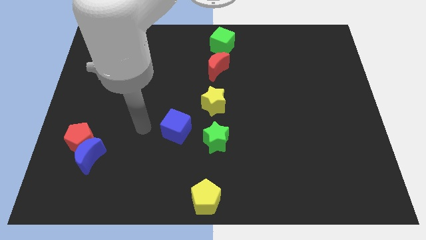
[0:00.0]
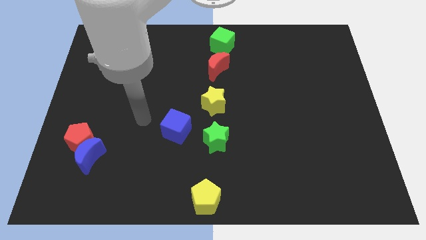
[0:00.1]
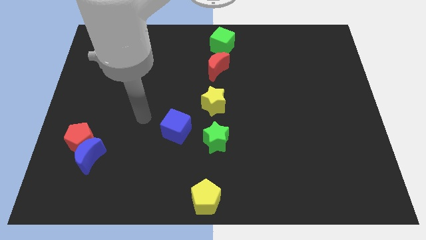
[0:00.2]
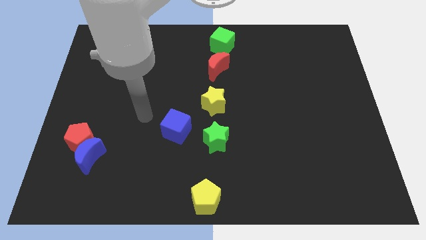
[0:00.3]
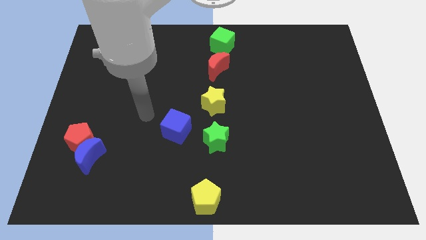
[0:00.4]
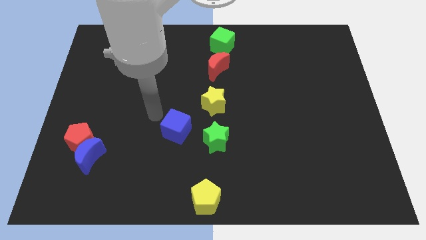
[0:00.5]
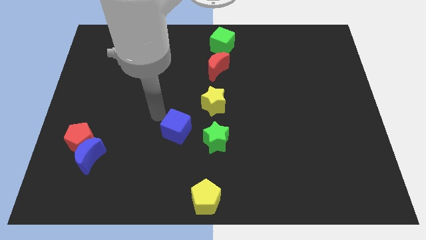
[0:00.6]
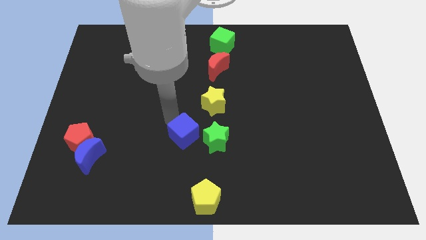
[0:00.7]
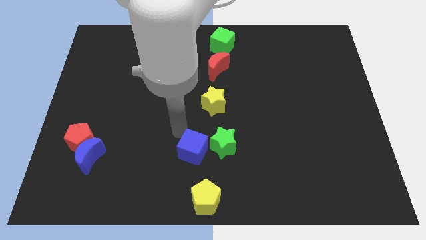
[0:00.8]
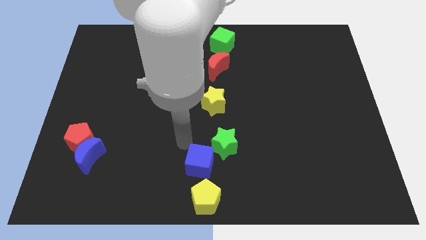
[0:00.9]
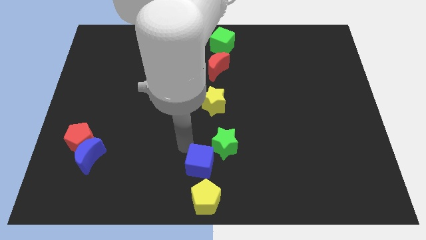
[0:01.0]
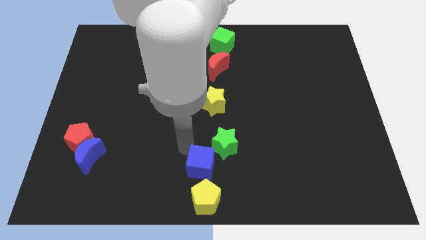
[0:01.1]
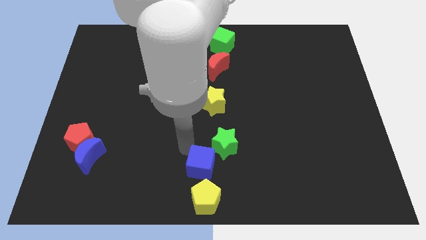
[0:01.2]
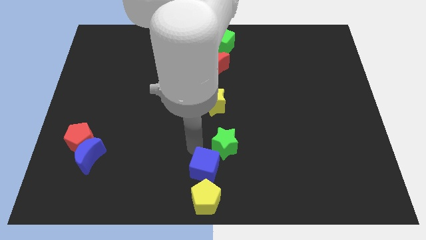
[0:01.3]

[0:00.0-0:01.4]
place the blue cube above the yellow pentagon

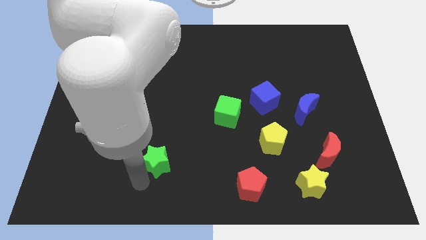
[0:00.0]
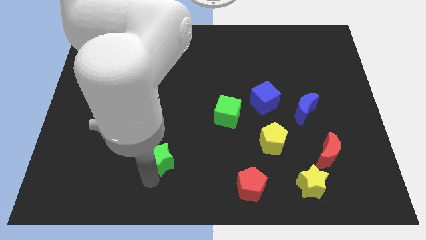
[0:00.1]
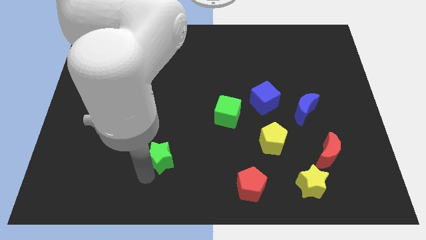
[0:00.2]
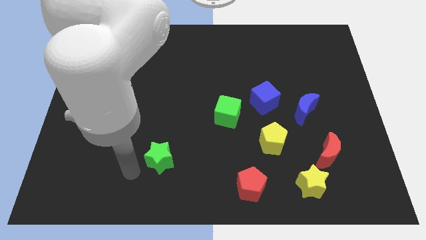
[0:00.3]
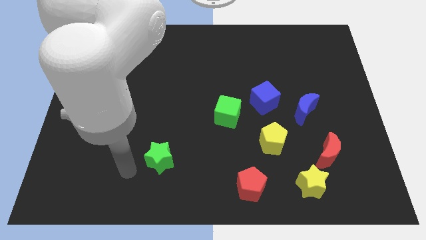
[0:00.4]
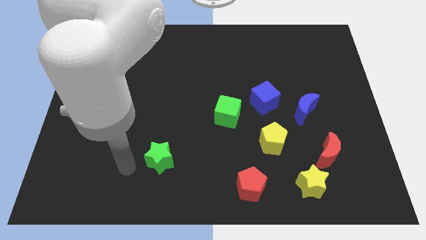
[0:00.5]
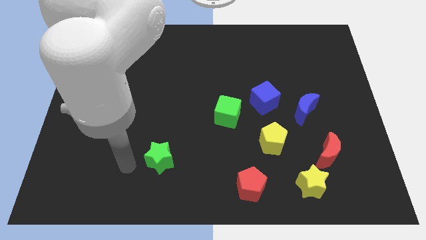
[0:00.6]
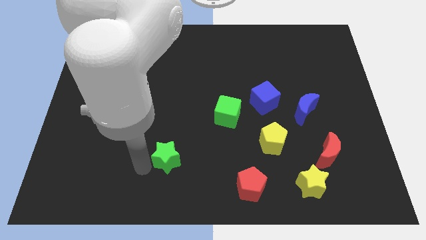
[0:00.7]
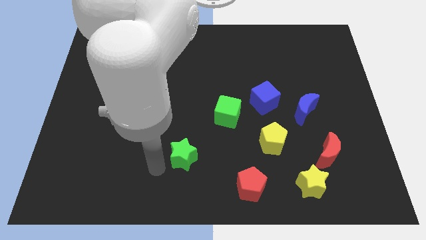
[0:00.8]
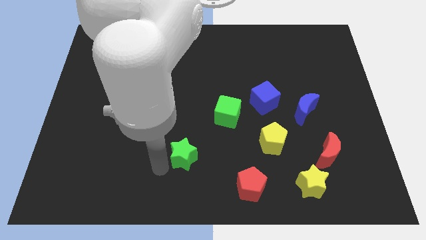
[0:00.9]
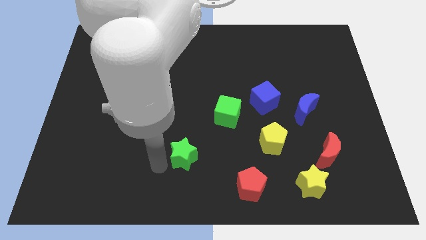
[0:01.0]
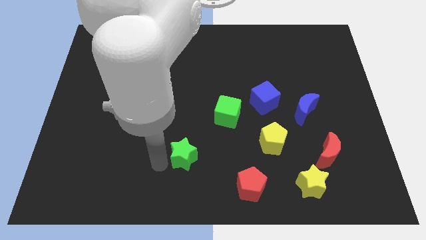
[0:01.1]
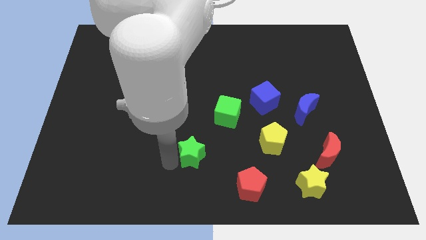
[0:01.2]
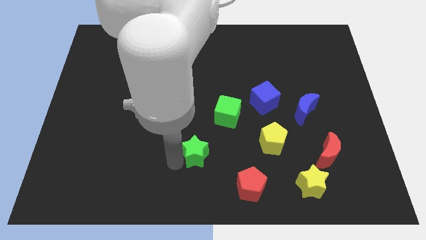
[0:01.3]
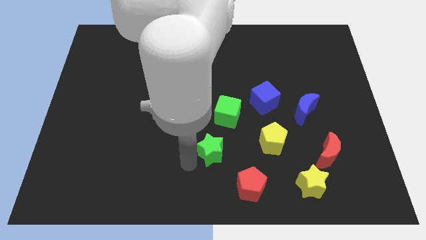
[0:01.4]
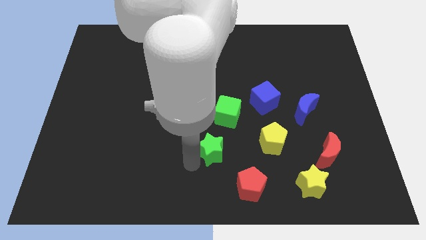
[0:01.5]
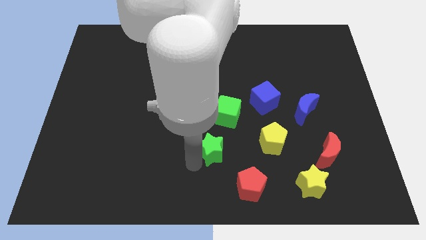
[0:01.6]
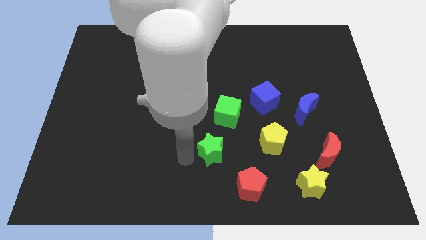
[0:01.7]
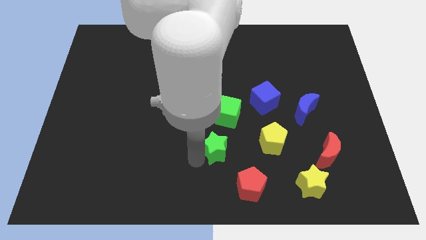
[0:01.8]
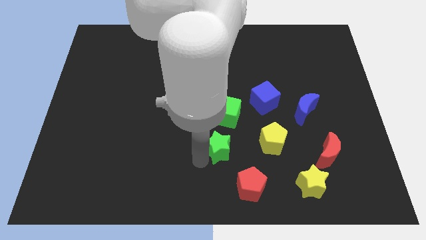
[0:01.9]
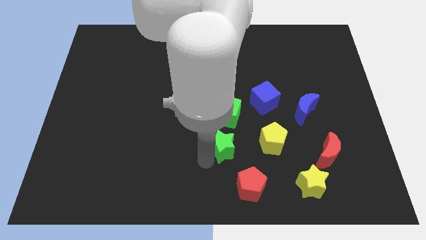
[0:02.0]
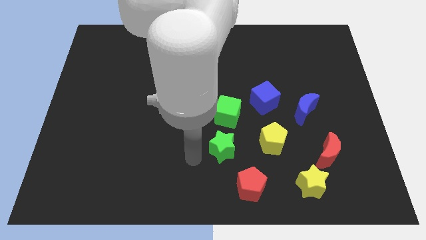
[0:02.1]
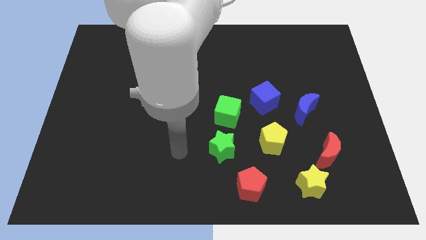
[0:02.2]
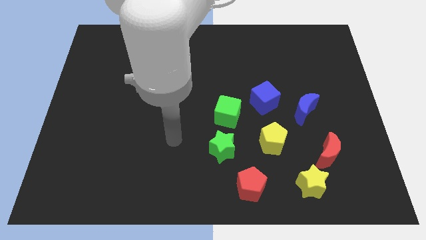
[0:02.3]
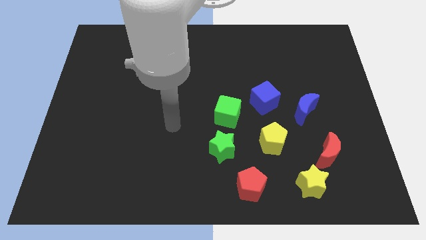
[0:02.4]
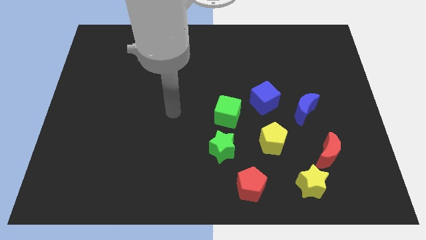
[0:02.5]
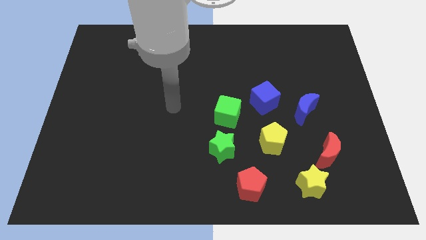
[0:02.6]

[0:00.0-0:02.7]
push the green star towards the bottom of the green cube

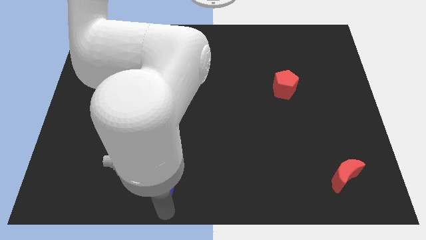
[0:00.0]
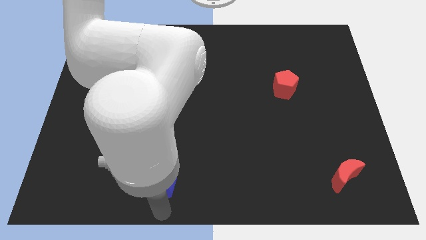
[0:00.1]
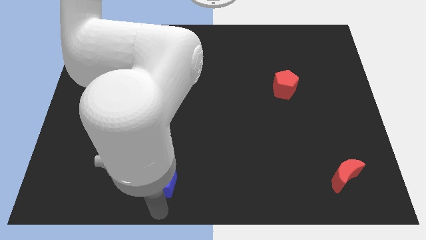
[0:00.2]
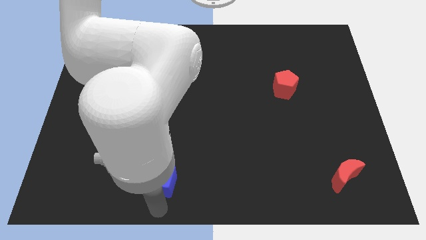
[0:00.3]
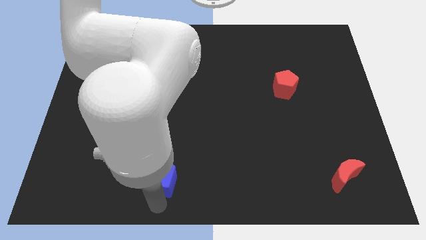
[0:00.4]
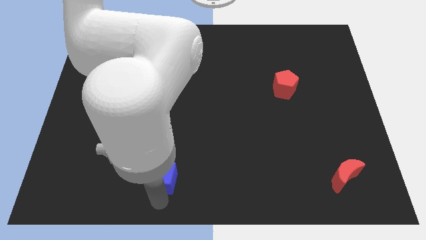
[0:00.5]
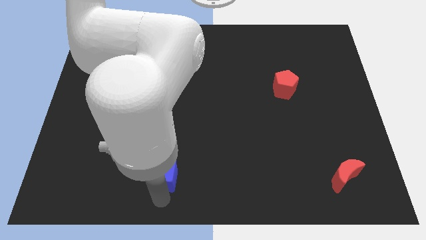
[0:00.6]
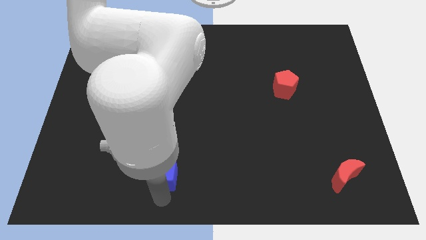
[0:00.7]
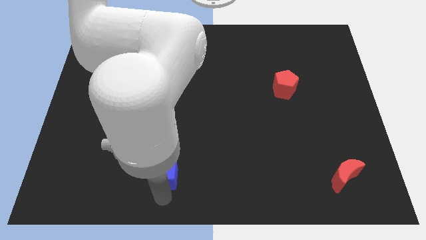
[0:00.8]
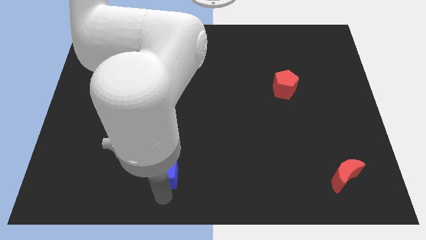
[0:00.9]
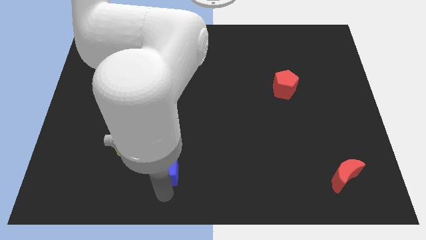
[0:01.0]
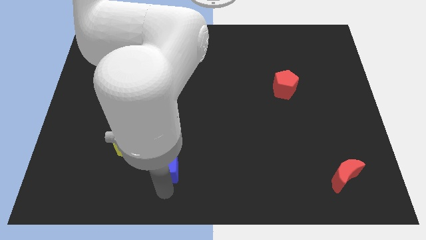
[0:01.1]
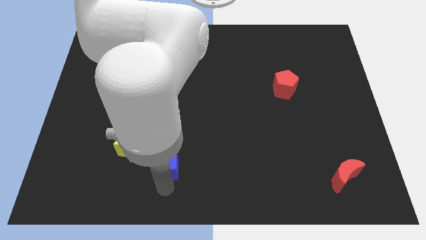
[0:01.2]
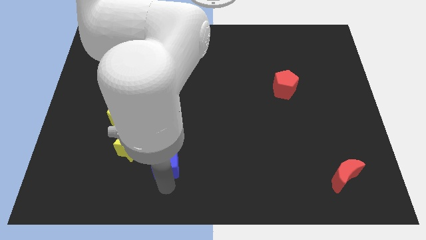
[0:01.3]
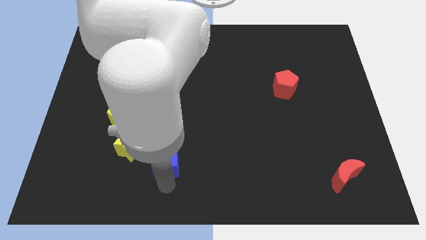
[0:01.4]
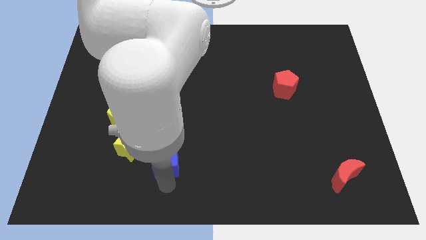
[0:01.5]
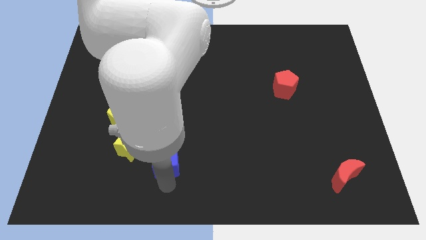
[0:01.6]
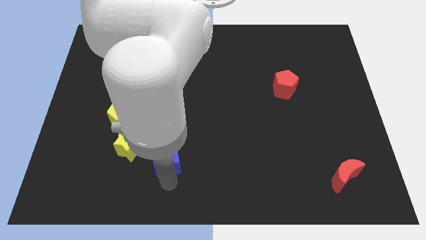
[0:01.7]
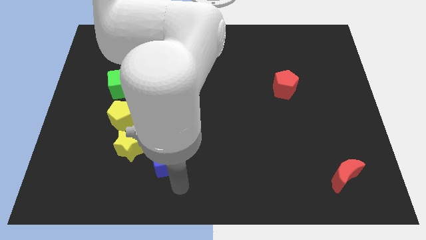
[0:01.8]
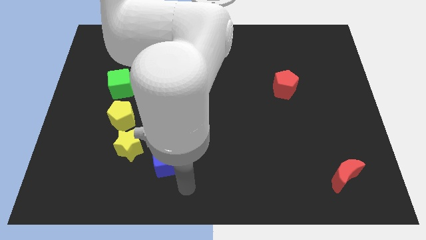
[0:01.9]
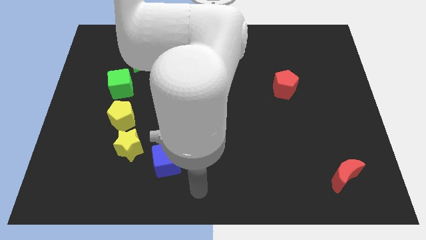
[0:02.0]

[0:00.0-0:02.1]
move the blue cube towards the top of the board

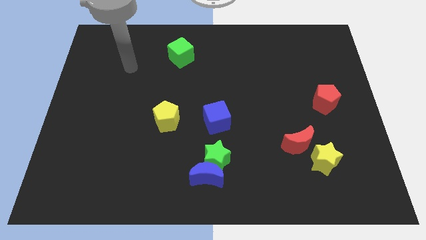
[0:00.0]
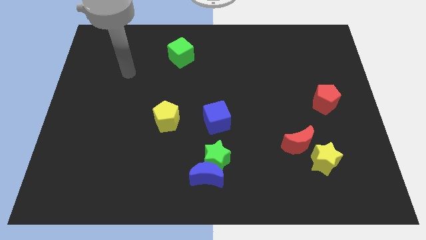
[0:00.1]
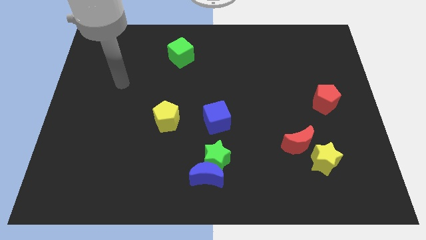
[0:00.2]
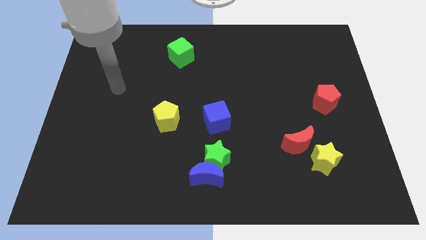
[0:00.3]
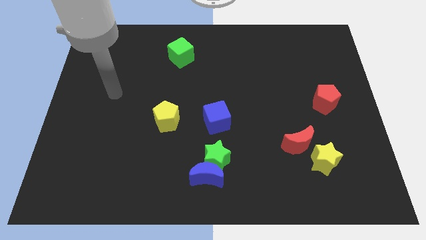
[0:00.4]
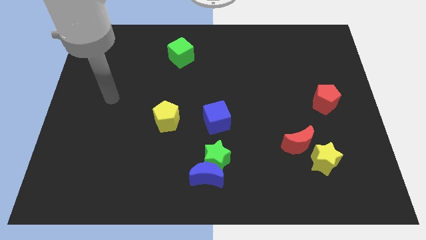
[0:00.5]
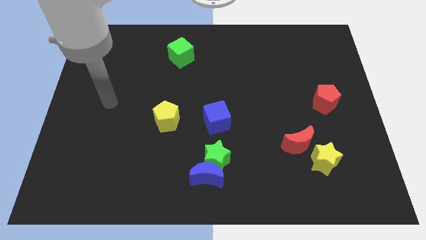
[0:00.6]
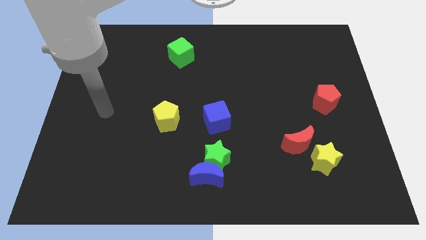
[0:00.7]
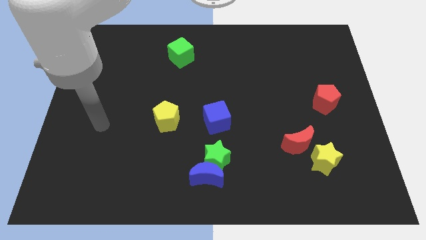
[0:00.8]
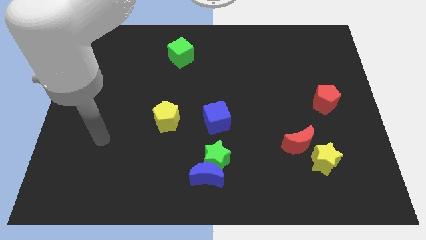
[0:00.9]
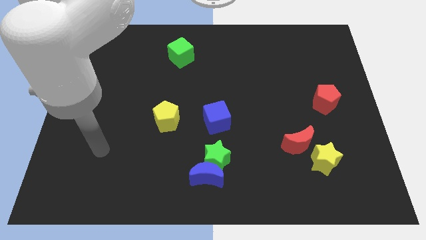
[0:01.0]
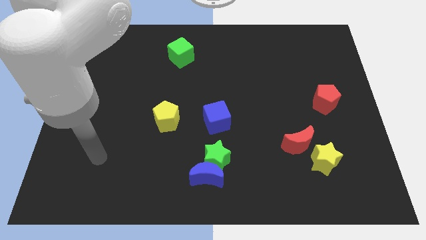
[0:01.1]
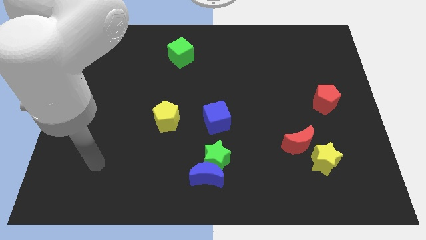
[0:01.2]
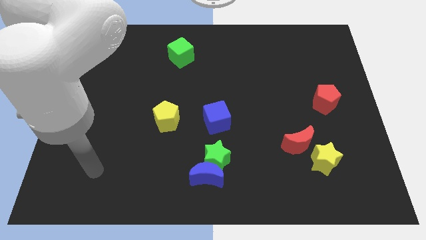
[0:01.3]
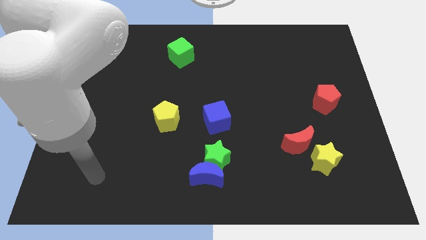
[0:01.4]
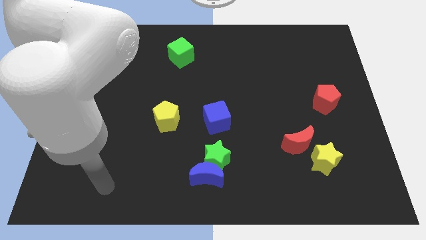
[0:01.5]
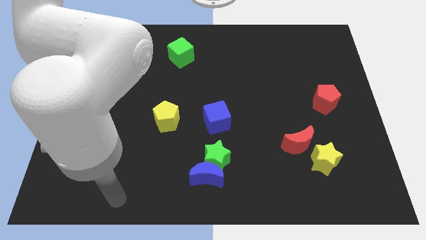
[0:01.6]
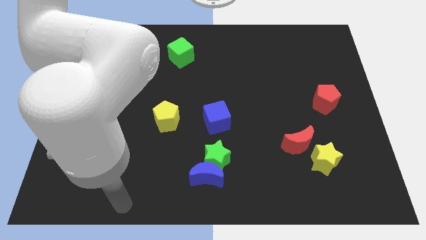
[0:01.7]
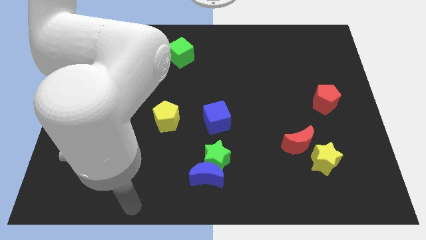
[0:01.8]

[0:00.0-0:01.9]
point your arm at the bottom side of the board

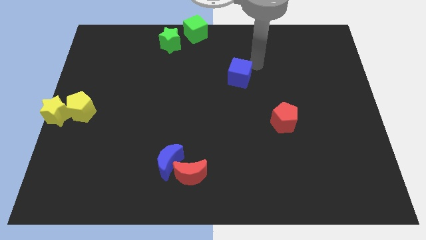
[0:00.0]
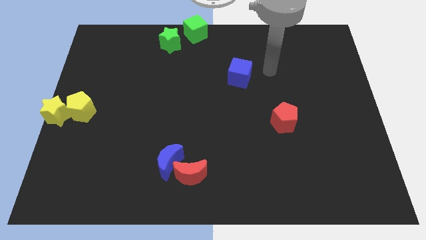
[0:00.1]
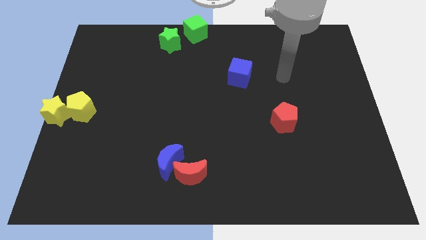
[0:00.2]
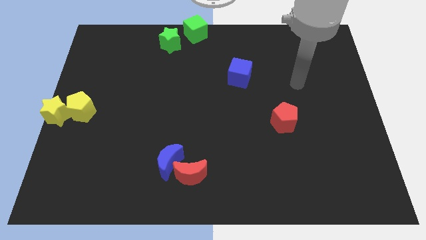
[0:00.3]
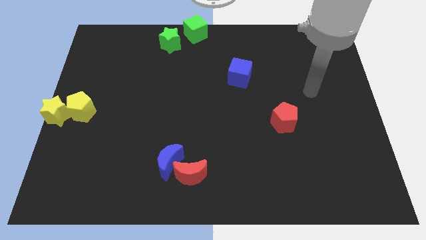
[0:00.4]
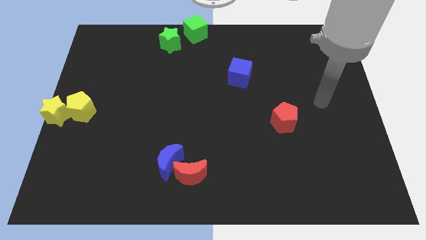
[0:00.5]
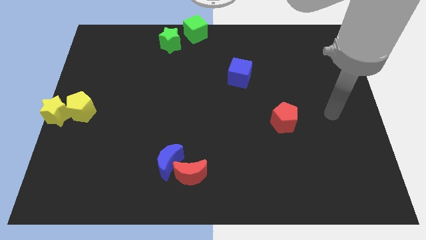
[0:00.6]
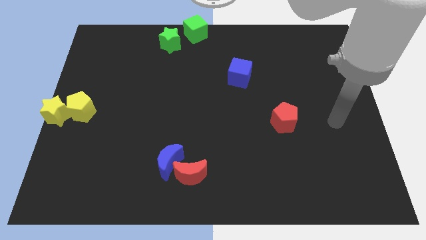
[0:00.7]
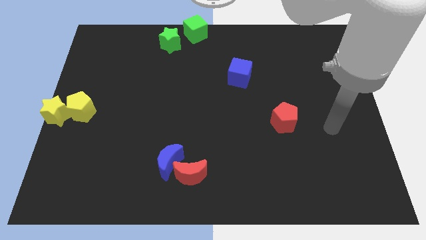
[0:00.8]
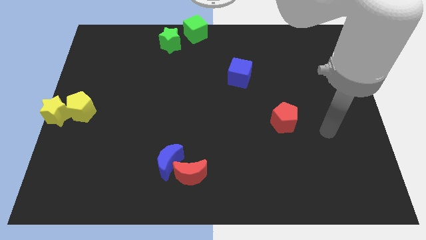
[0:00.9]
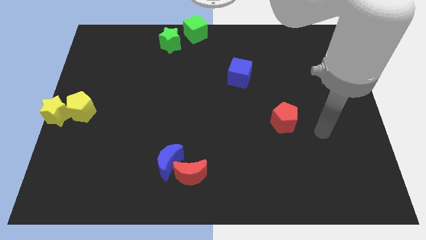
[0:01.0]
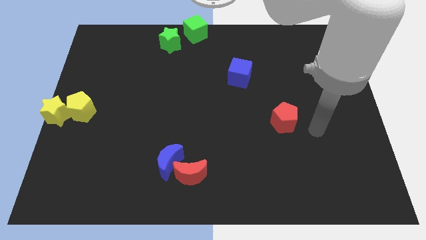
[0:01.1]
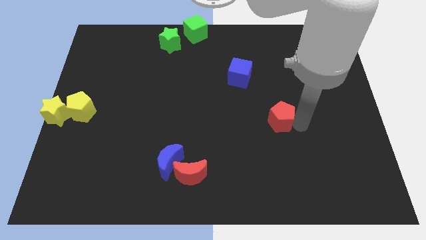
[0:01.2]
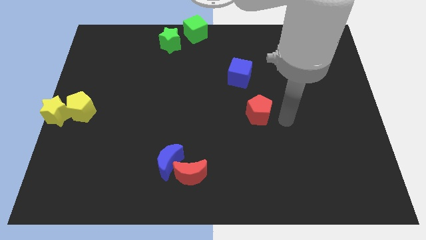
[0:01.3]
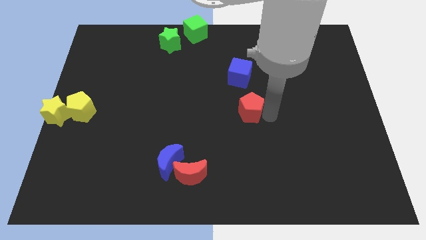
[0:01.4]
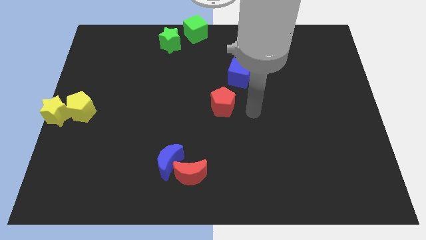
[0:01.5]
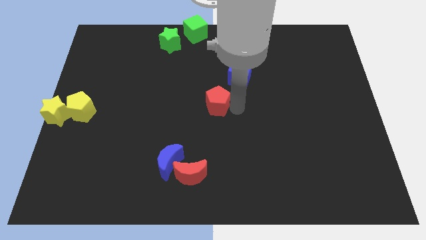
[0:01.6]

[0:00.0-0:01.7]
push the red pentagon to the center
